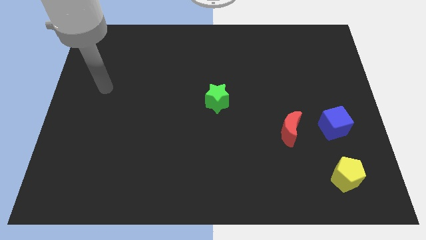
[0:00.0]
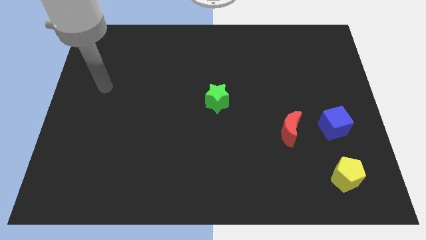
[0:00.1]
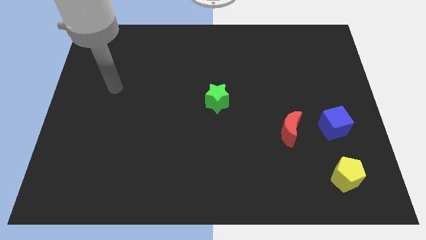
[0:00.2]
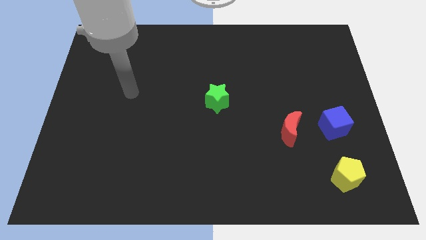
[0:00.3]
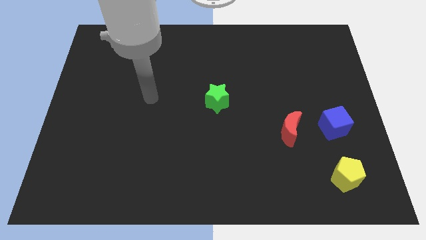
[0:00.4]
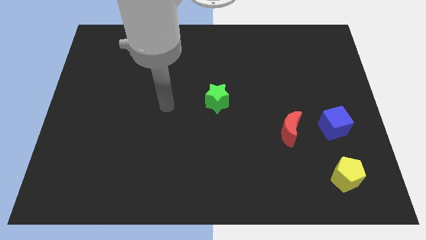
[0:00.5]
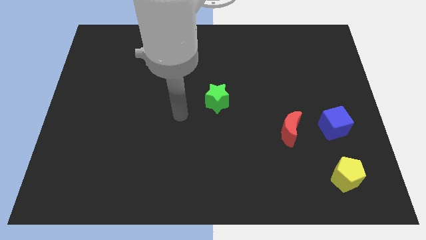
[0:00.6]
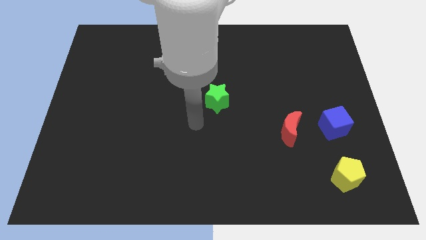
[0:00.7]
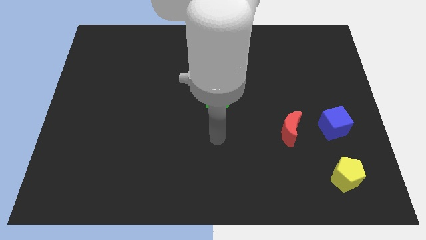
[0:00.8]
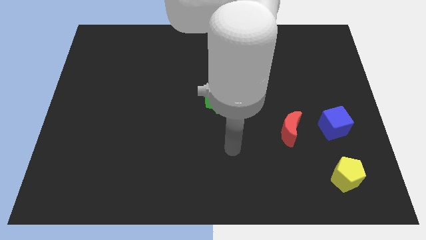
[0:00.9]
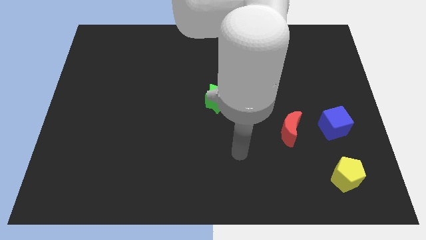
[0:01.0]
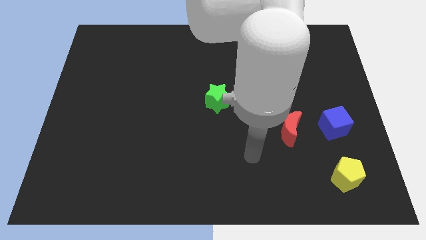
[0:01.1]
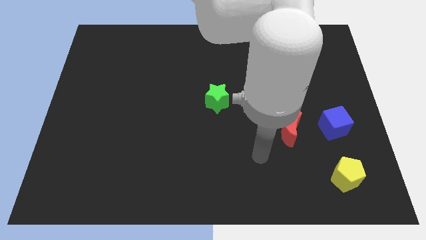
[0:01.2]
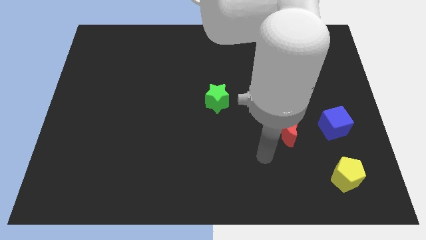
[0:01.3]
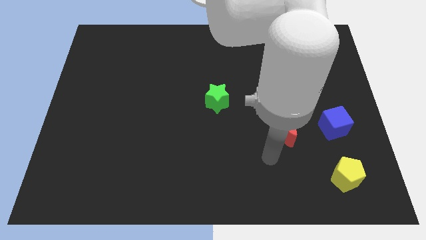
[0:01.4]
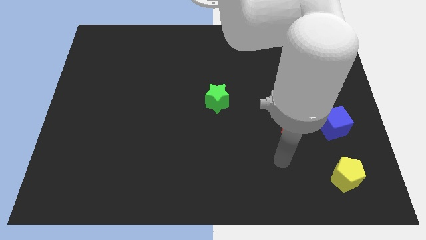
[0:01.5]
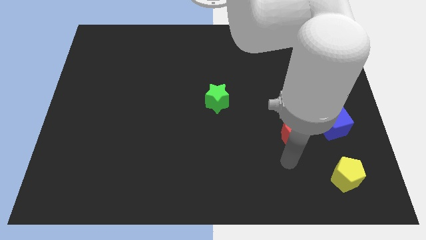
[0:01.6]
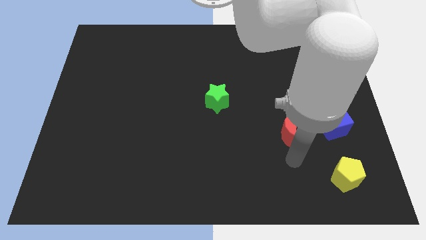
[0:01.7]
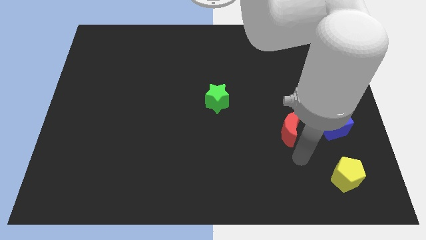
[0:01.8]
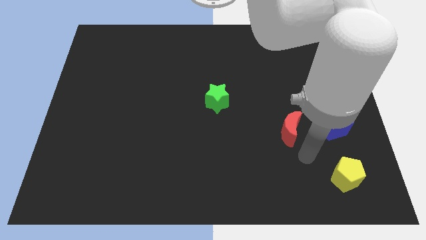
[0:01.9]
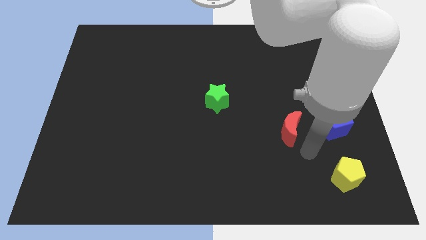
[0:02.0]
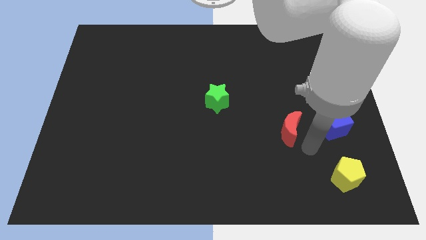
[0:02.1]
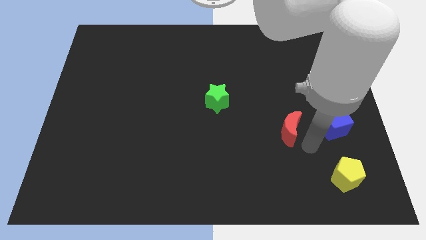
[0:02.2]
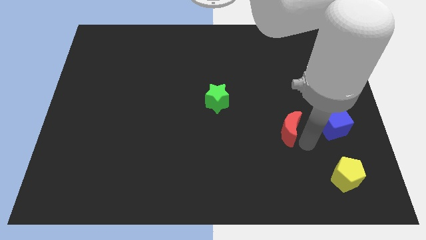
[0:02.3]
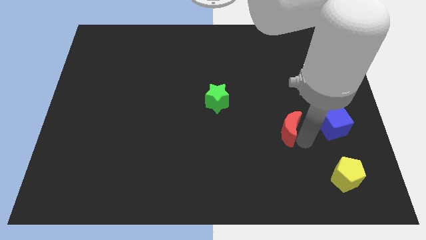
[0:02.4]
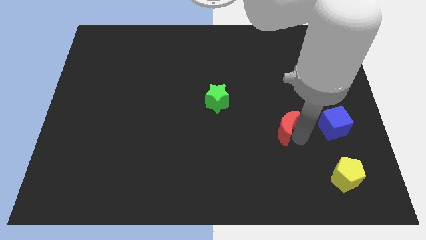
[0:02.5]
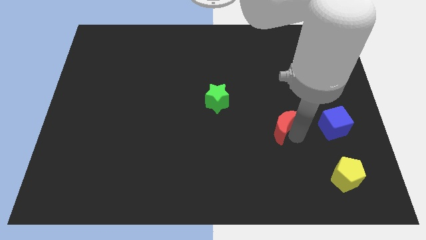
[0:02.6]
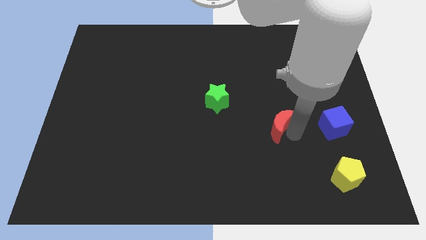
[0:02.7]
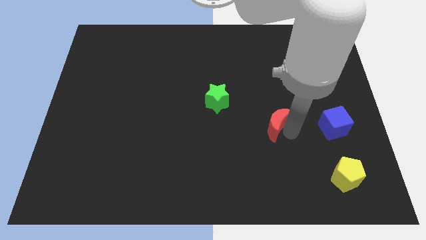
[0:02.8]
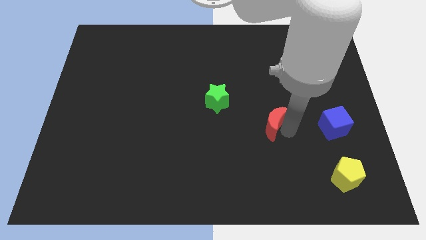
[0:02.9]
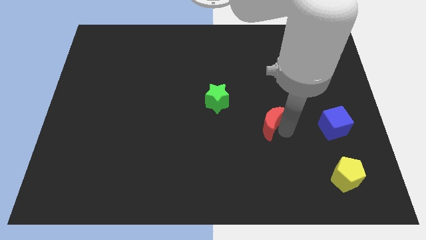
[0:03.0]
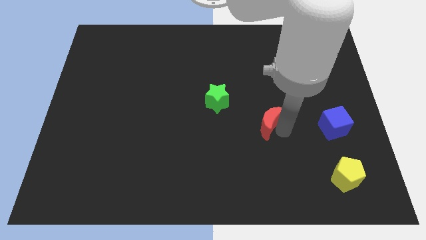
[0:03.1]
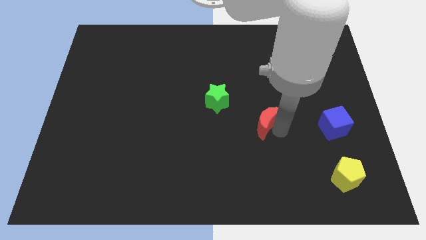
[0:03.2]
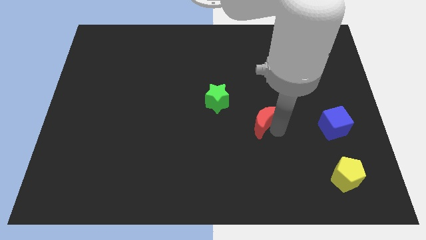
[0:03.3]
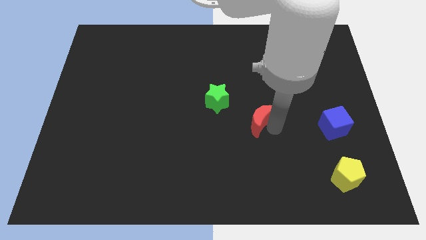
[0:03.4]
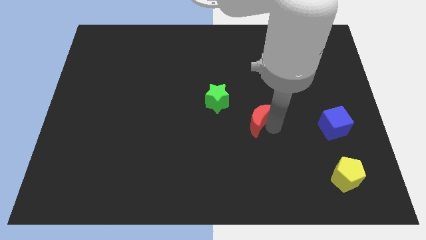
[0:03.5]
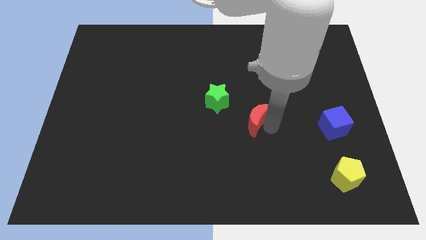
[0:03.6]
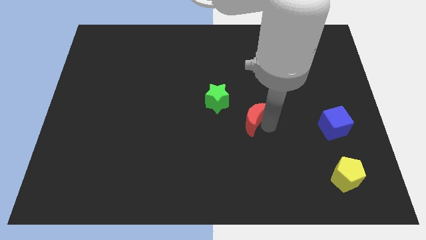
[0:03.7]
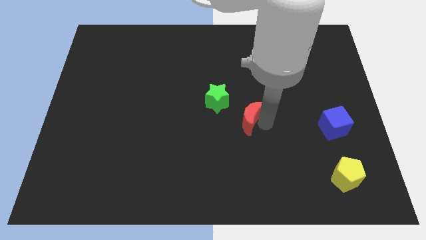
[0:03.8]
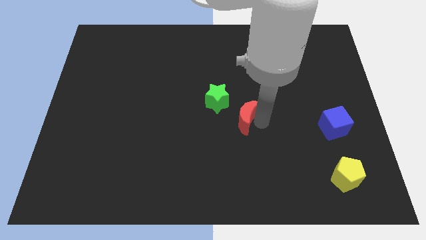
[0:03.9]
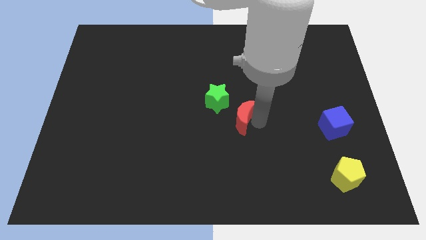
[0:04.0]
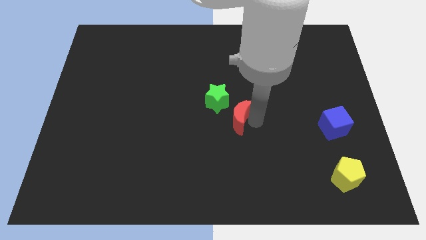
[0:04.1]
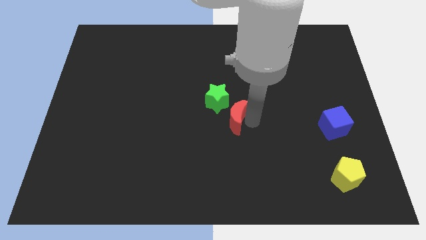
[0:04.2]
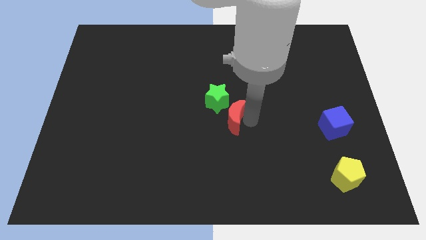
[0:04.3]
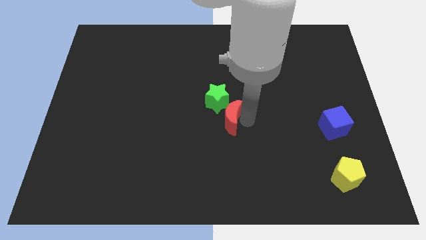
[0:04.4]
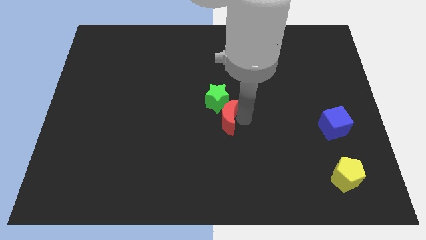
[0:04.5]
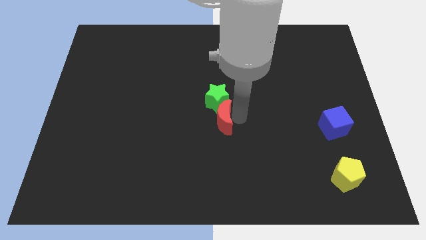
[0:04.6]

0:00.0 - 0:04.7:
put the red moon to the green block

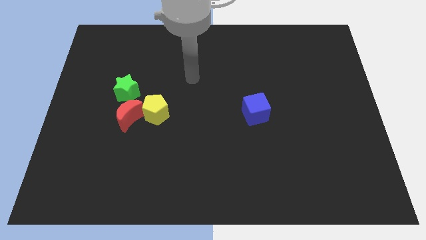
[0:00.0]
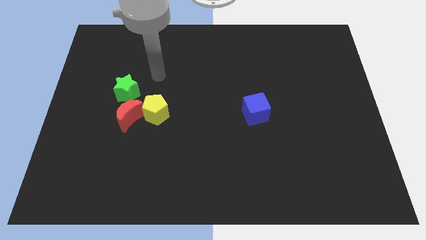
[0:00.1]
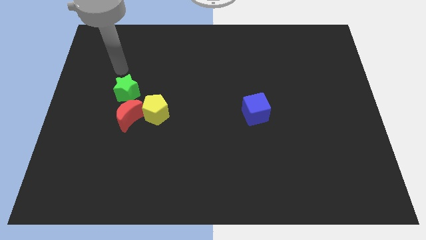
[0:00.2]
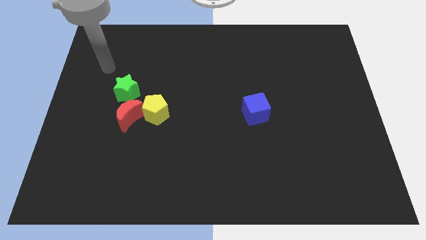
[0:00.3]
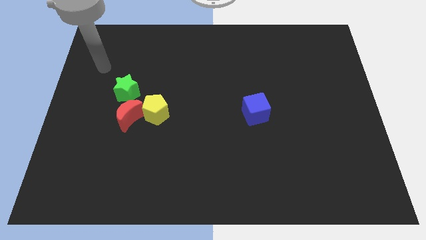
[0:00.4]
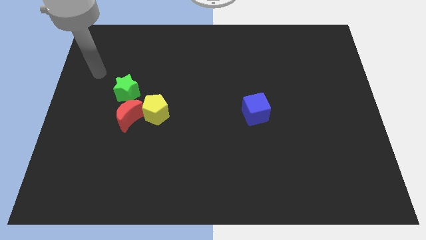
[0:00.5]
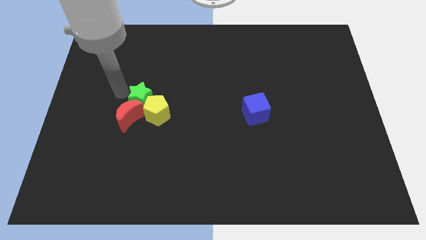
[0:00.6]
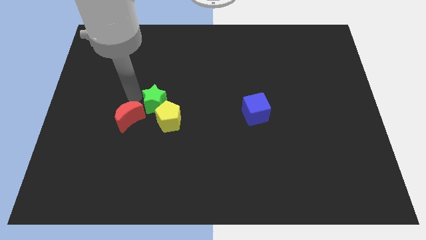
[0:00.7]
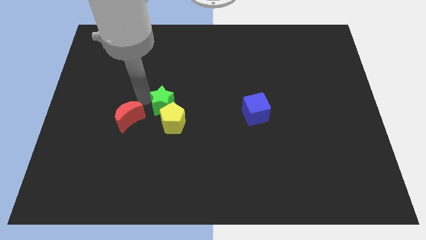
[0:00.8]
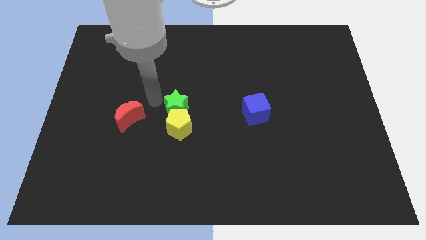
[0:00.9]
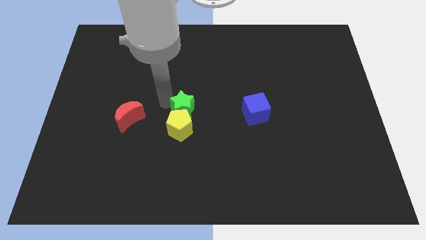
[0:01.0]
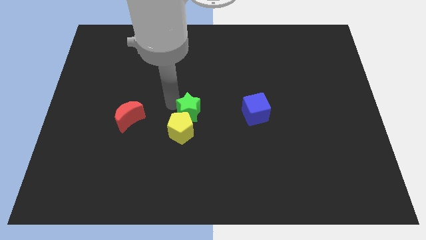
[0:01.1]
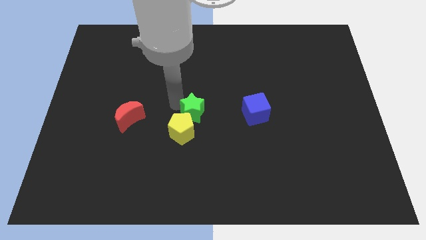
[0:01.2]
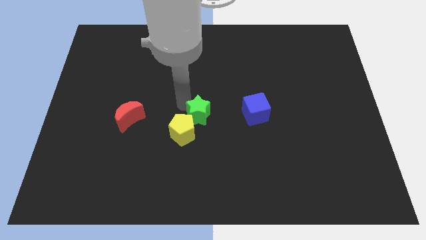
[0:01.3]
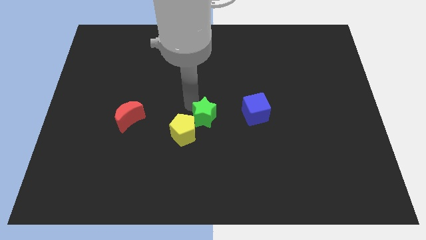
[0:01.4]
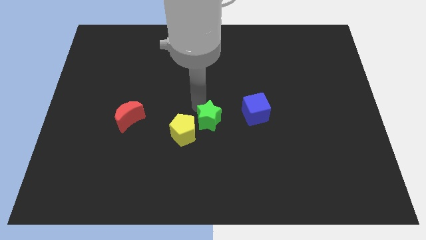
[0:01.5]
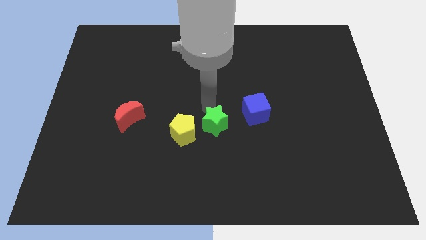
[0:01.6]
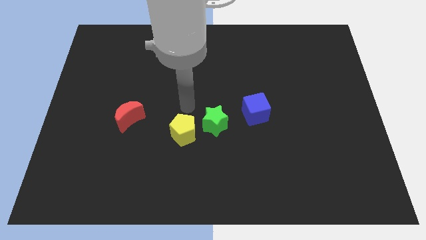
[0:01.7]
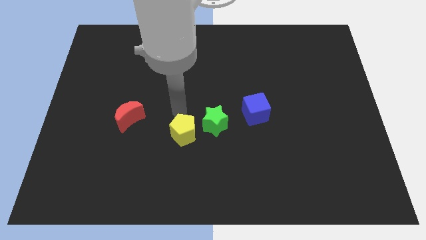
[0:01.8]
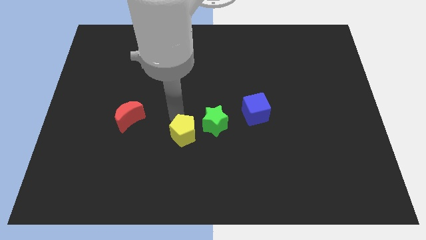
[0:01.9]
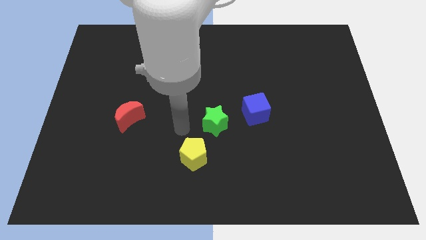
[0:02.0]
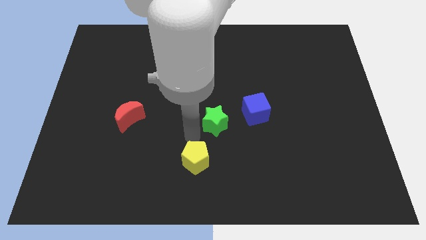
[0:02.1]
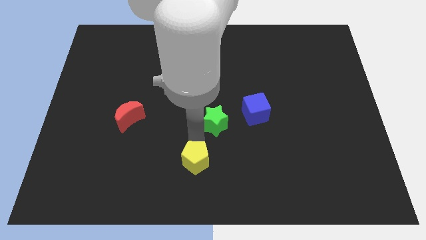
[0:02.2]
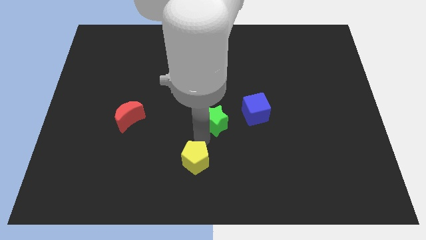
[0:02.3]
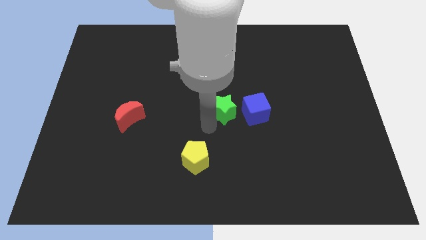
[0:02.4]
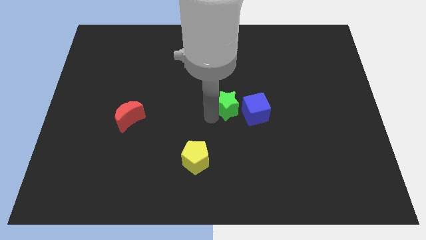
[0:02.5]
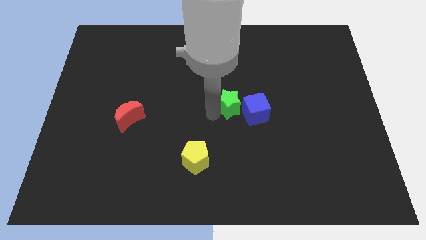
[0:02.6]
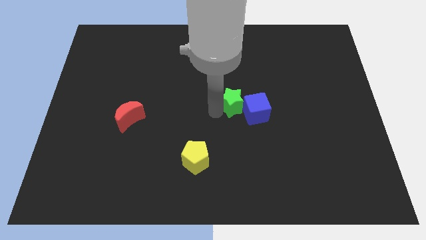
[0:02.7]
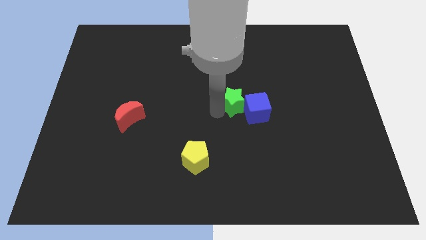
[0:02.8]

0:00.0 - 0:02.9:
slide the star to the blue cube

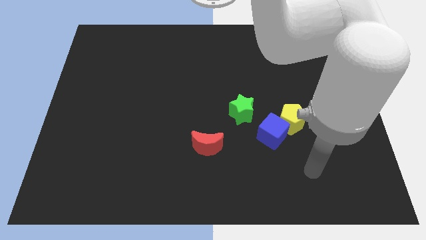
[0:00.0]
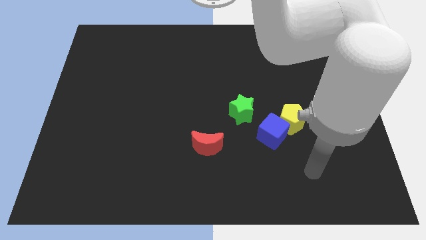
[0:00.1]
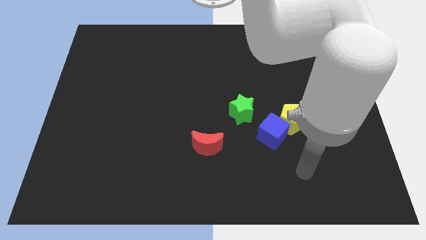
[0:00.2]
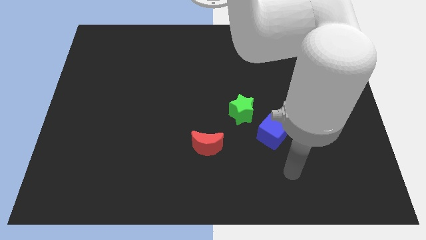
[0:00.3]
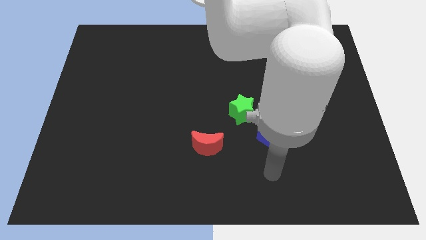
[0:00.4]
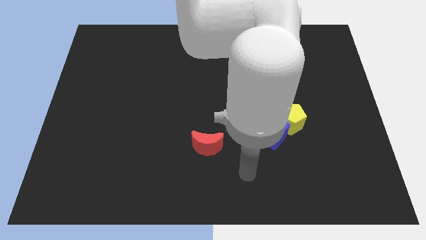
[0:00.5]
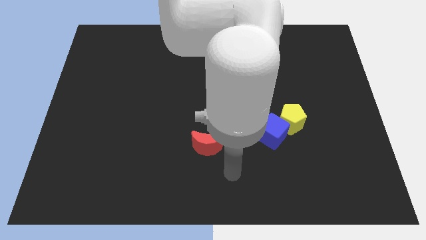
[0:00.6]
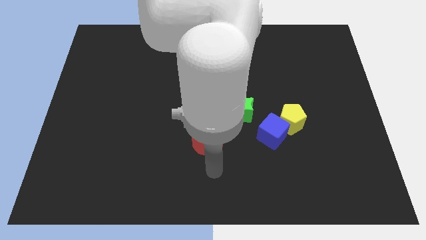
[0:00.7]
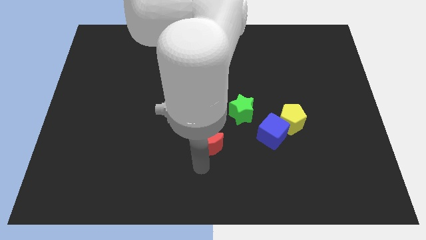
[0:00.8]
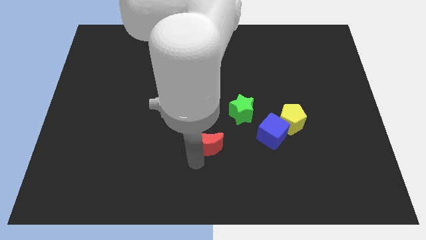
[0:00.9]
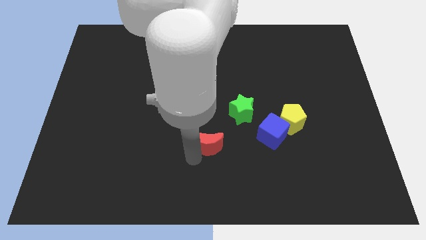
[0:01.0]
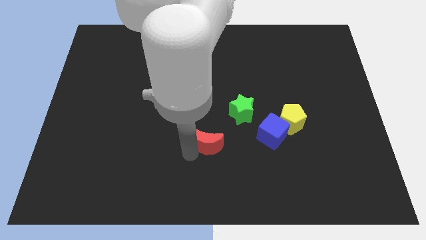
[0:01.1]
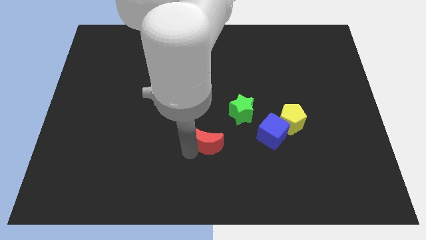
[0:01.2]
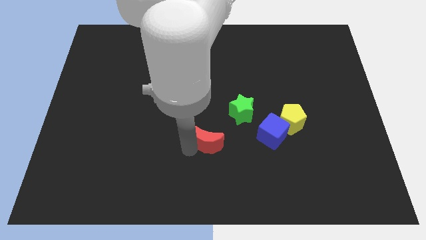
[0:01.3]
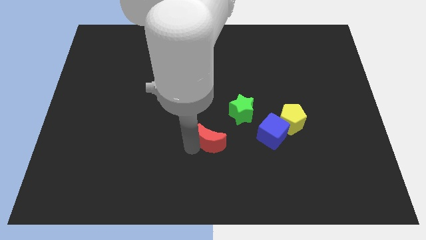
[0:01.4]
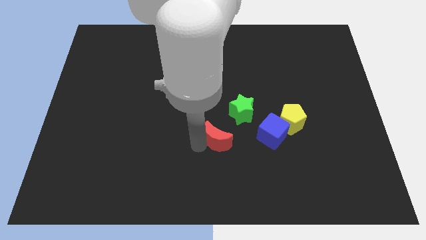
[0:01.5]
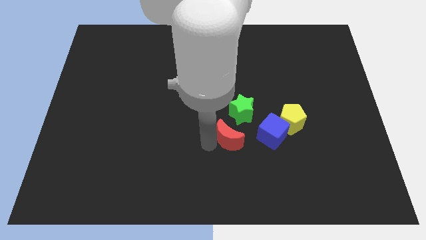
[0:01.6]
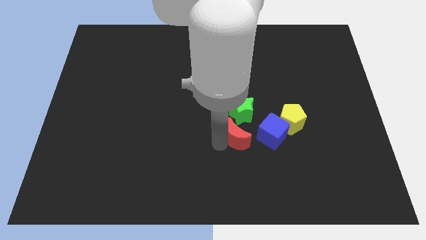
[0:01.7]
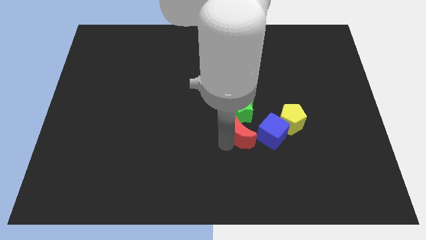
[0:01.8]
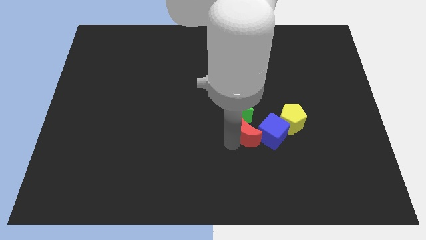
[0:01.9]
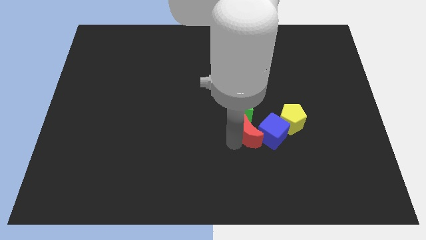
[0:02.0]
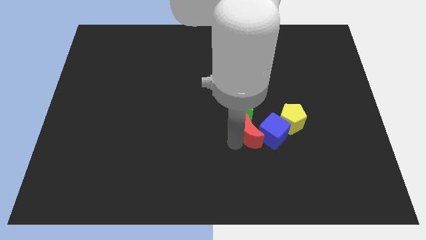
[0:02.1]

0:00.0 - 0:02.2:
put the moon next to the blue block
